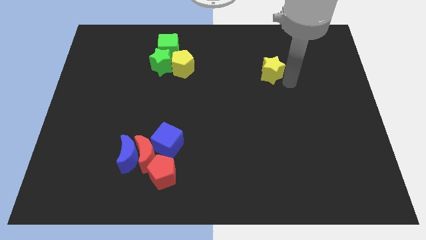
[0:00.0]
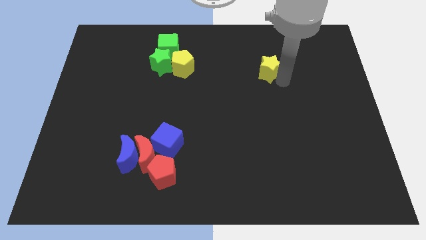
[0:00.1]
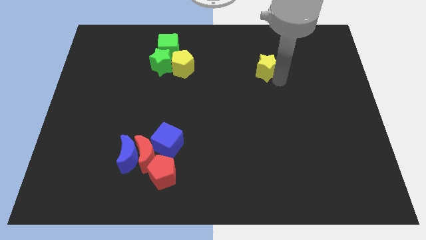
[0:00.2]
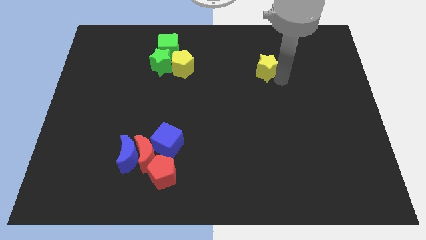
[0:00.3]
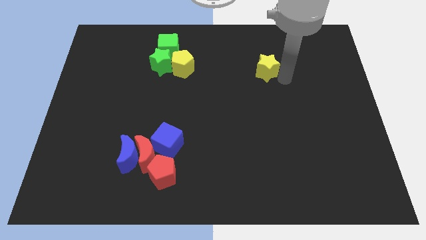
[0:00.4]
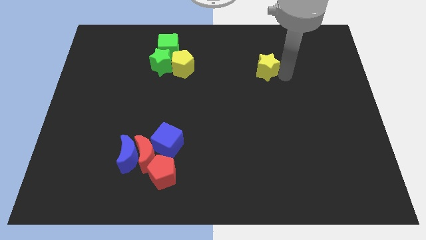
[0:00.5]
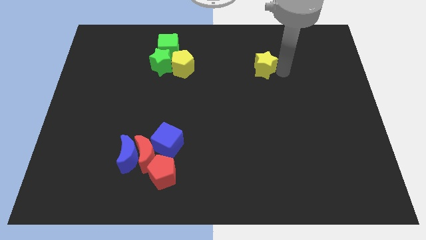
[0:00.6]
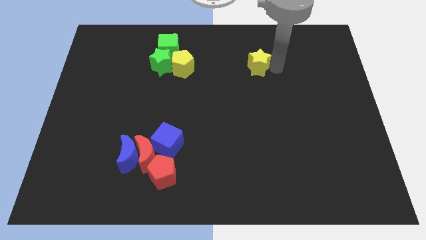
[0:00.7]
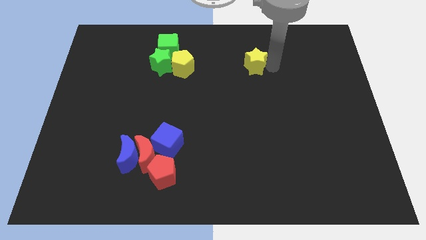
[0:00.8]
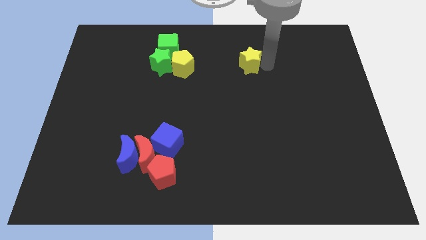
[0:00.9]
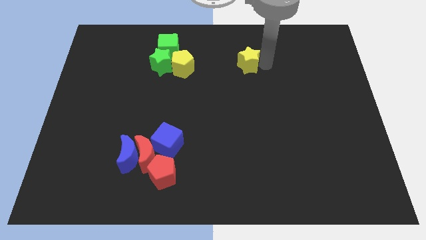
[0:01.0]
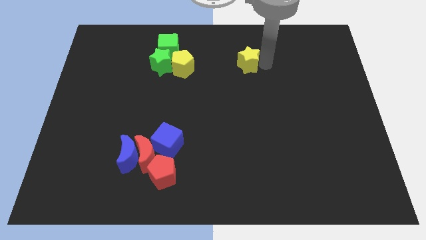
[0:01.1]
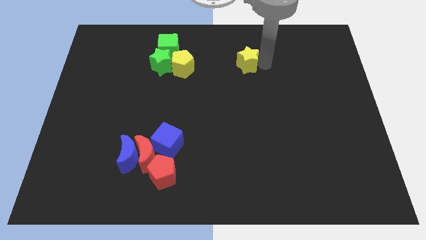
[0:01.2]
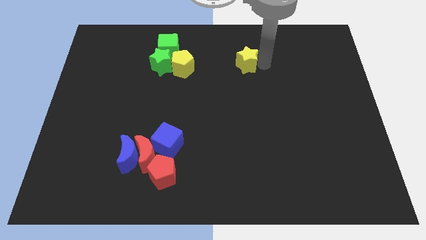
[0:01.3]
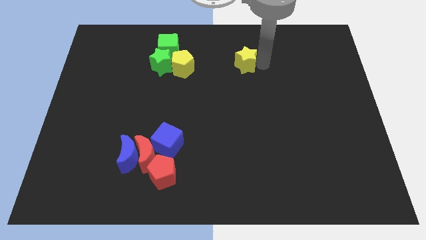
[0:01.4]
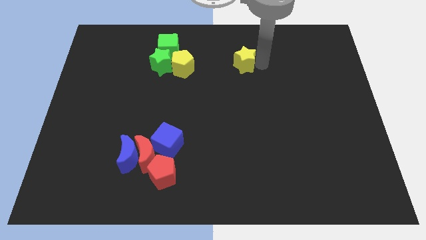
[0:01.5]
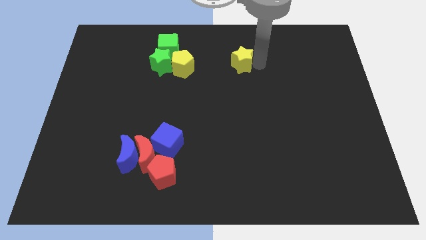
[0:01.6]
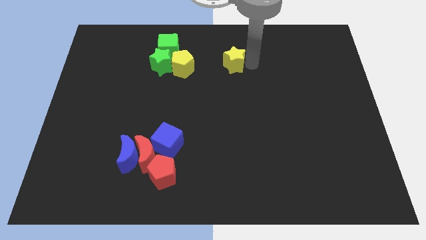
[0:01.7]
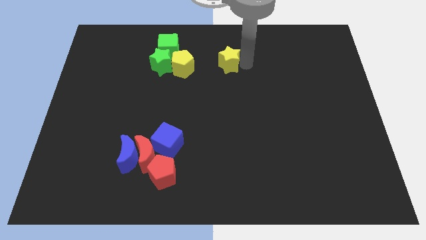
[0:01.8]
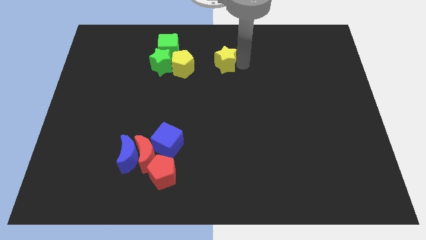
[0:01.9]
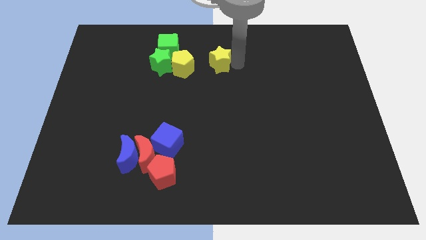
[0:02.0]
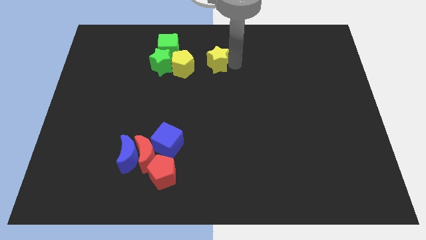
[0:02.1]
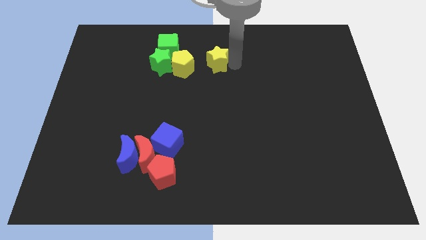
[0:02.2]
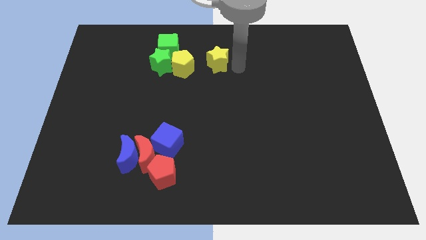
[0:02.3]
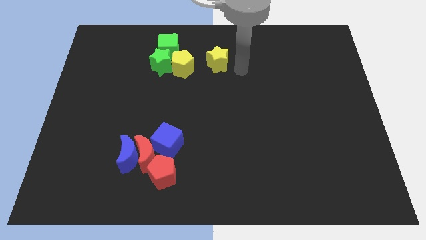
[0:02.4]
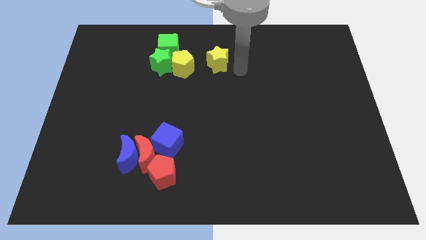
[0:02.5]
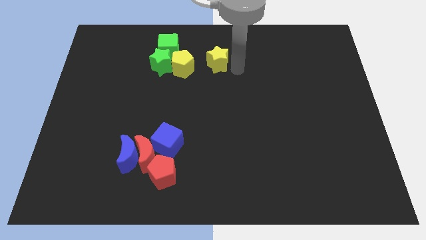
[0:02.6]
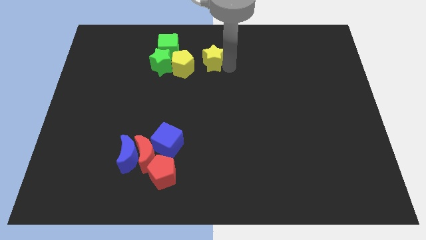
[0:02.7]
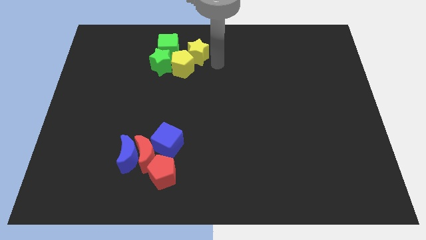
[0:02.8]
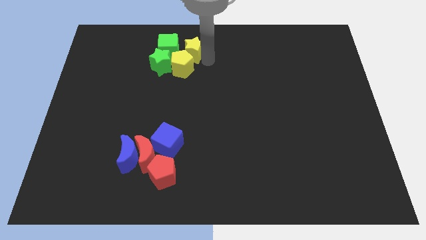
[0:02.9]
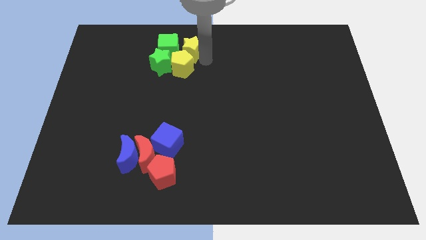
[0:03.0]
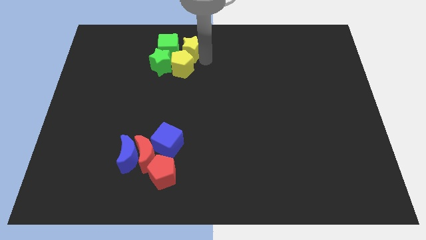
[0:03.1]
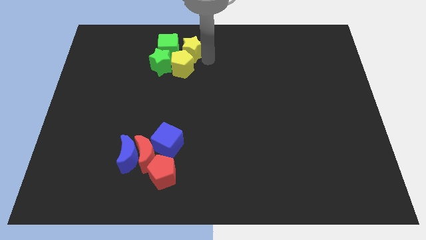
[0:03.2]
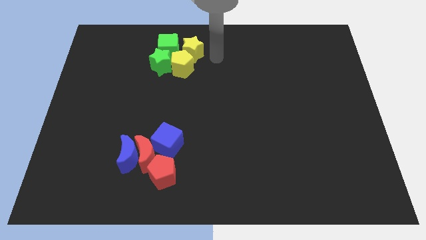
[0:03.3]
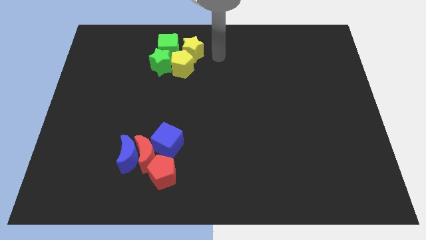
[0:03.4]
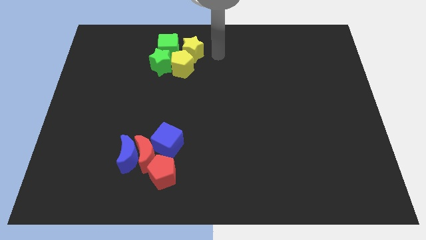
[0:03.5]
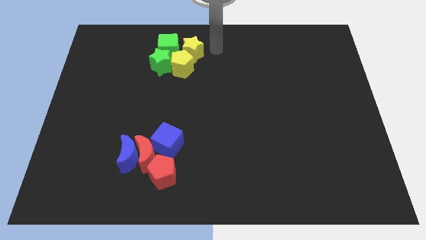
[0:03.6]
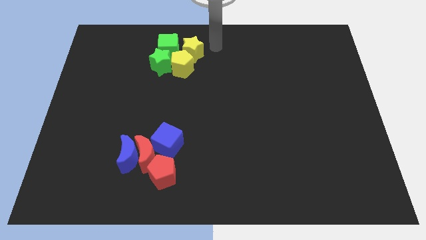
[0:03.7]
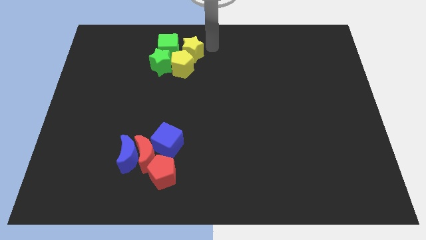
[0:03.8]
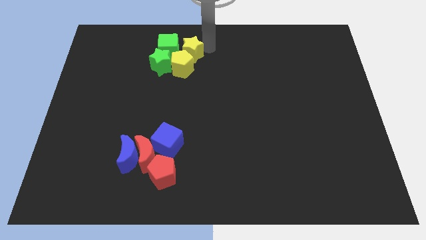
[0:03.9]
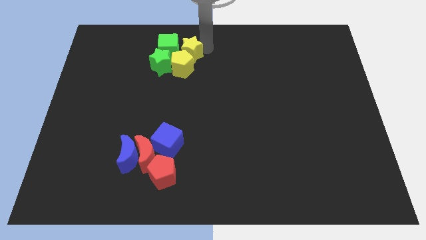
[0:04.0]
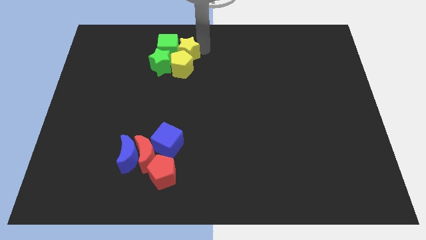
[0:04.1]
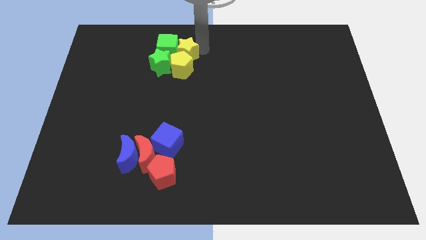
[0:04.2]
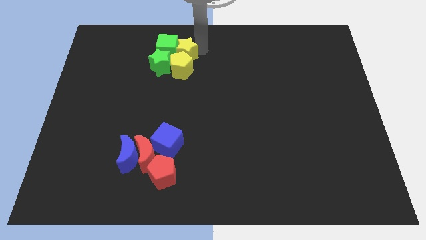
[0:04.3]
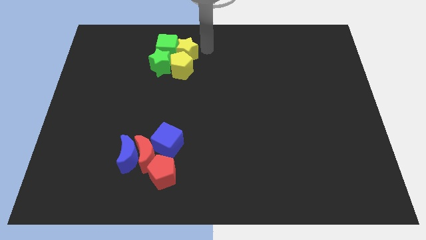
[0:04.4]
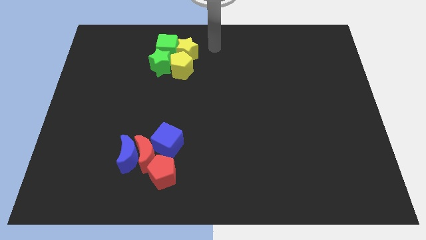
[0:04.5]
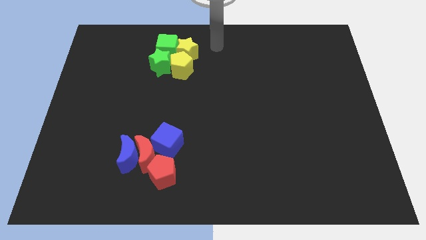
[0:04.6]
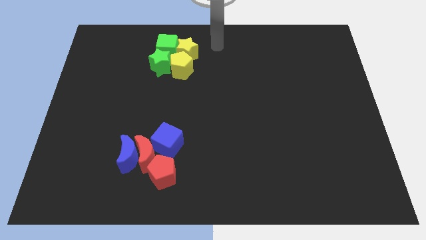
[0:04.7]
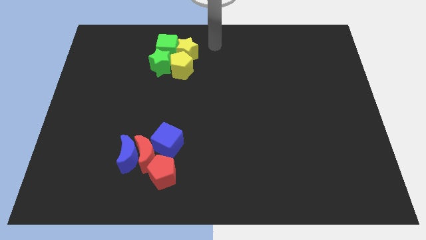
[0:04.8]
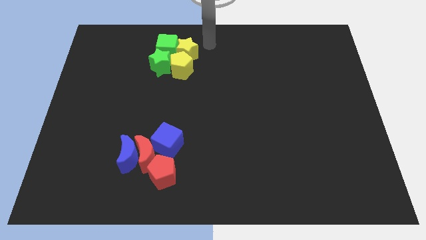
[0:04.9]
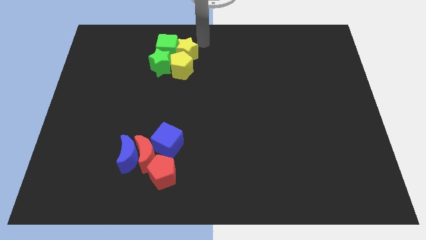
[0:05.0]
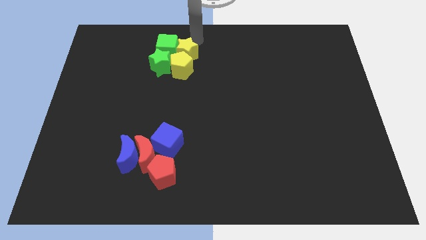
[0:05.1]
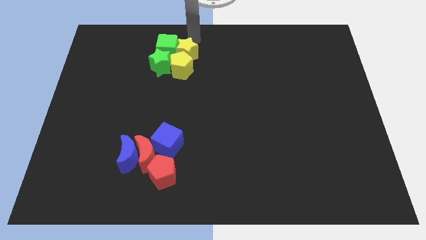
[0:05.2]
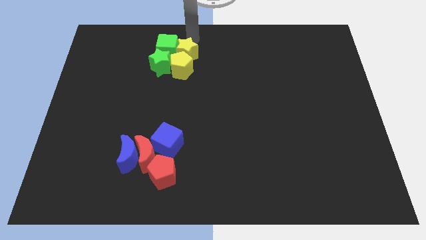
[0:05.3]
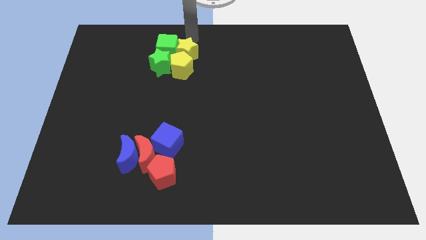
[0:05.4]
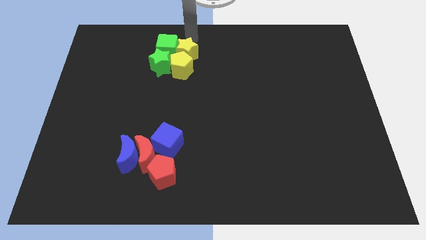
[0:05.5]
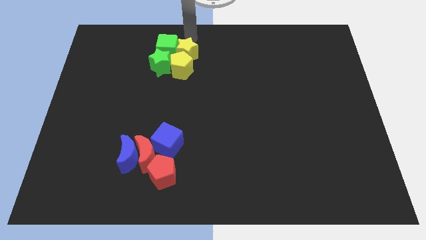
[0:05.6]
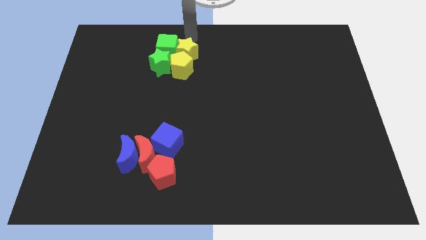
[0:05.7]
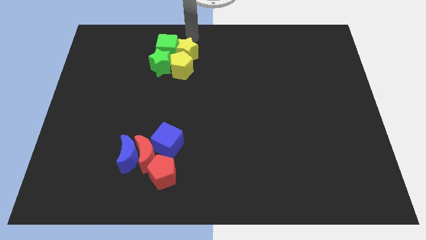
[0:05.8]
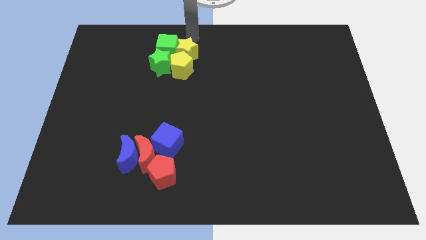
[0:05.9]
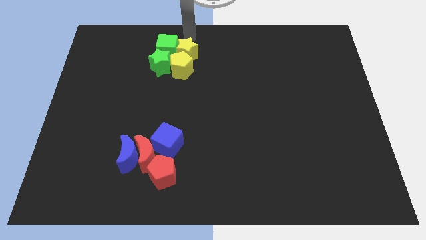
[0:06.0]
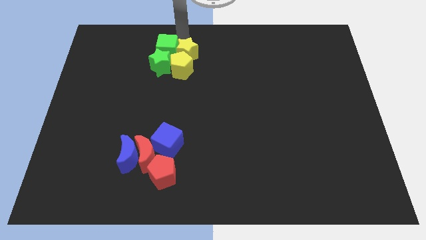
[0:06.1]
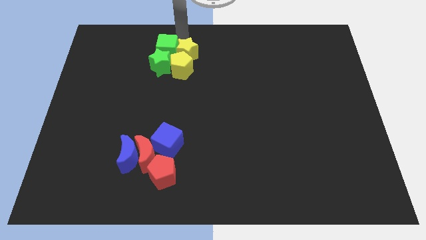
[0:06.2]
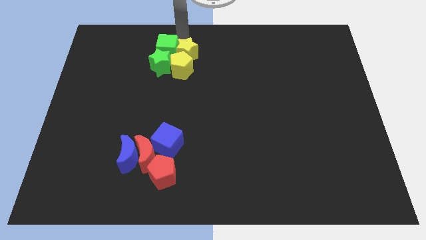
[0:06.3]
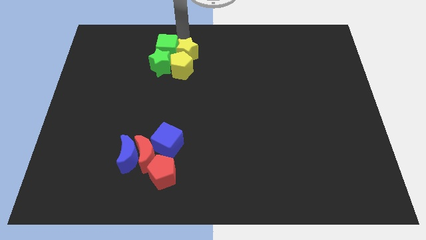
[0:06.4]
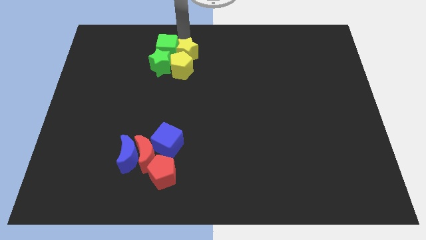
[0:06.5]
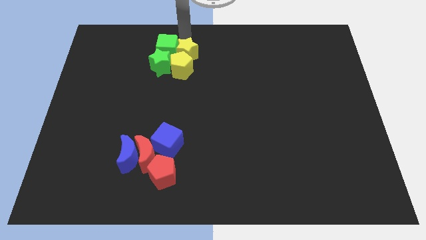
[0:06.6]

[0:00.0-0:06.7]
push the yellow star into the green cube

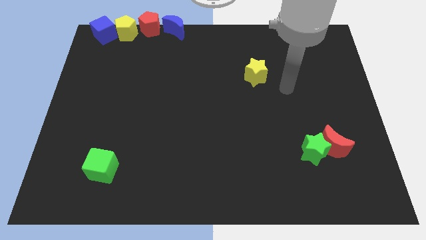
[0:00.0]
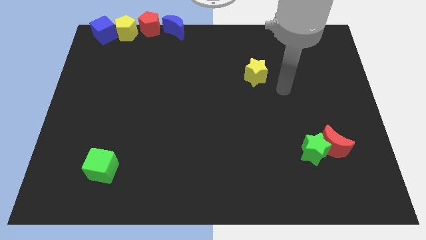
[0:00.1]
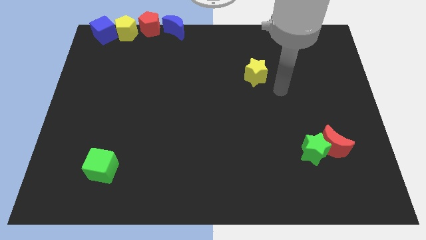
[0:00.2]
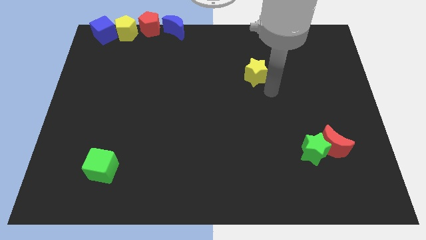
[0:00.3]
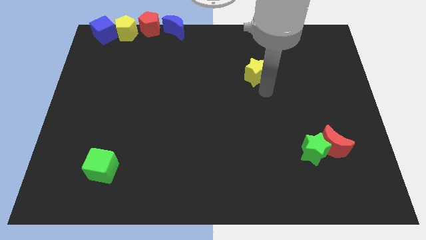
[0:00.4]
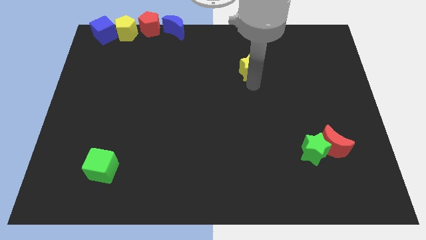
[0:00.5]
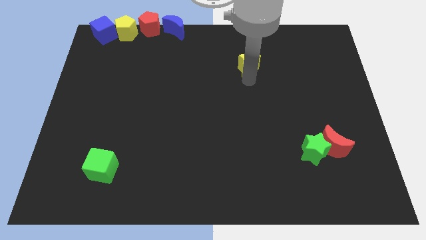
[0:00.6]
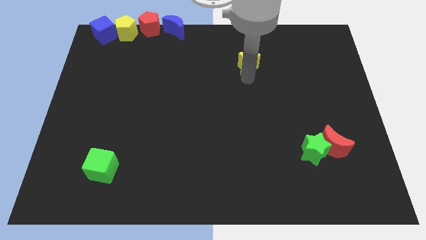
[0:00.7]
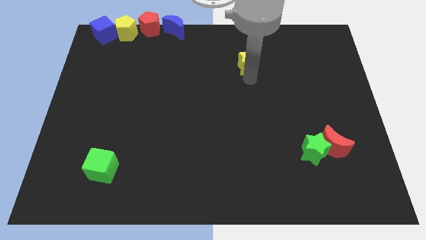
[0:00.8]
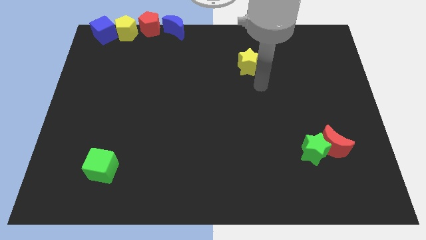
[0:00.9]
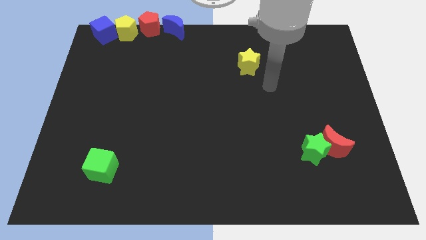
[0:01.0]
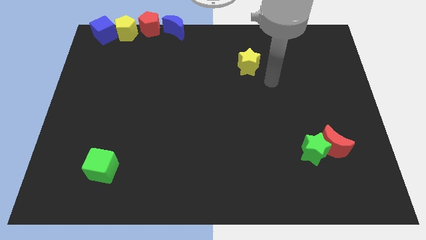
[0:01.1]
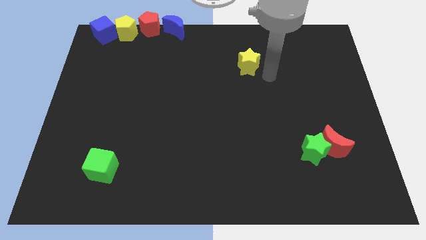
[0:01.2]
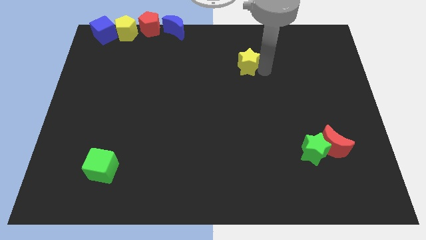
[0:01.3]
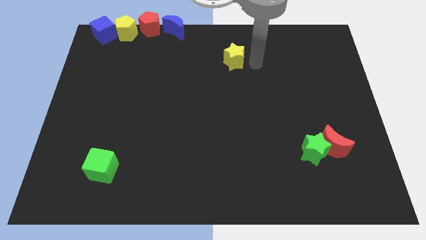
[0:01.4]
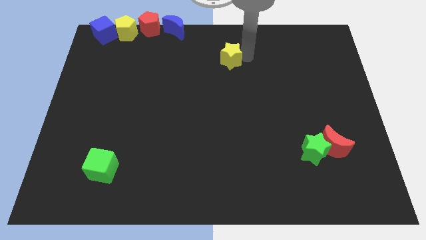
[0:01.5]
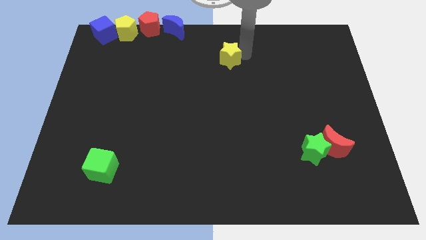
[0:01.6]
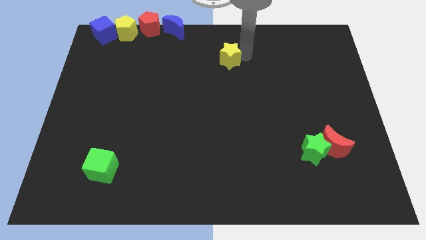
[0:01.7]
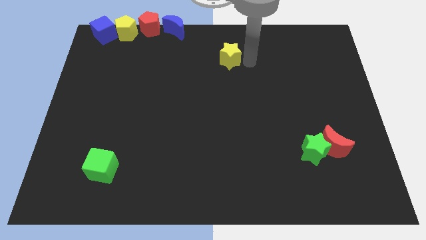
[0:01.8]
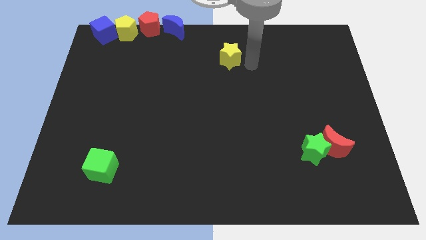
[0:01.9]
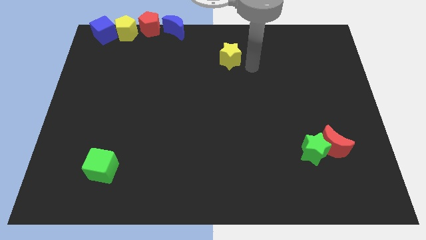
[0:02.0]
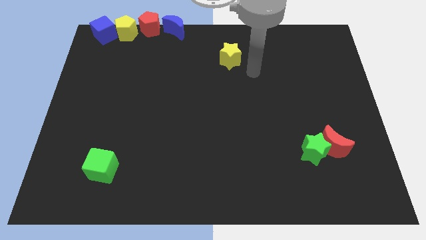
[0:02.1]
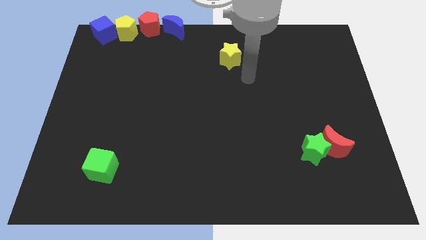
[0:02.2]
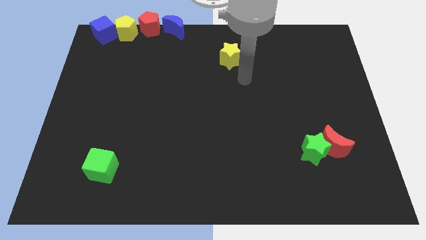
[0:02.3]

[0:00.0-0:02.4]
push the yellow star towards the top
